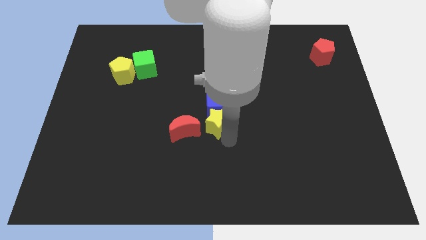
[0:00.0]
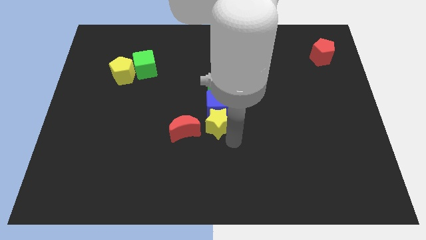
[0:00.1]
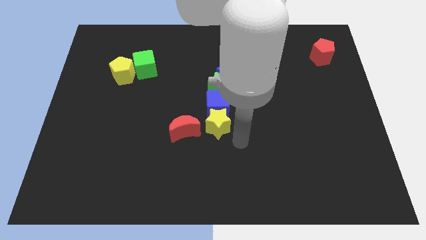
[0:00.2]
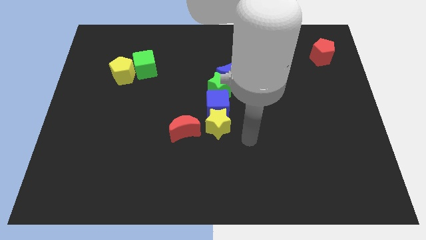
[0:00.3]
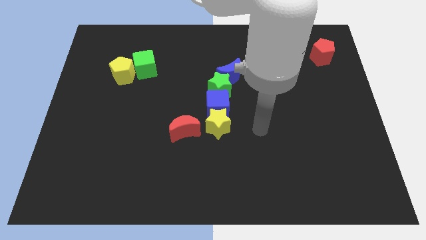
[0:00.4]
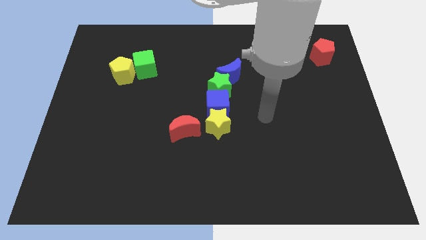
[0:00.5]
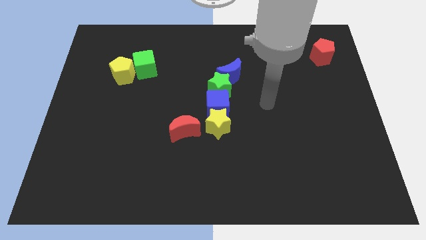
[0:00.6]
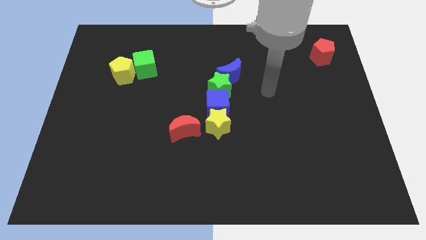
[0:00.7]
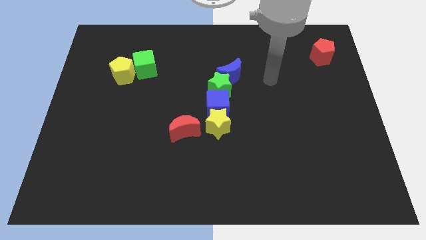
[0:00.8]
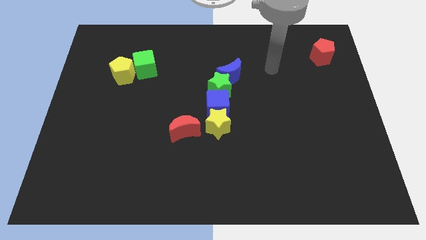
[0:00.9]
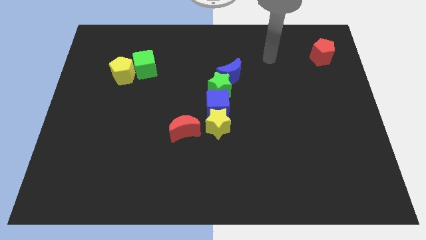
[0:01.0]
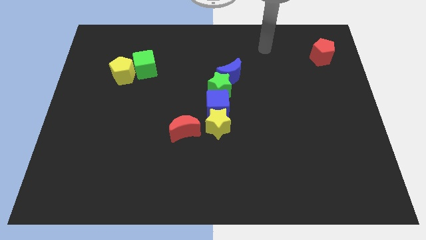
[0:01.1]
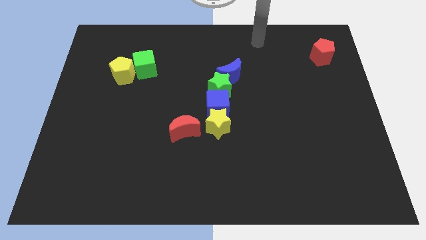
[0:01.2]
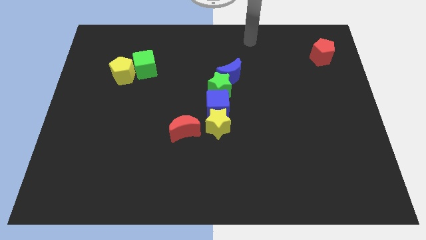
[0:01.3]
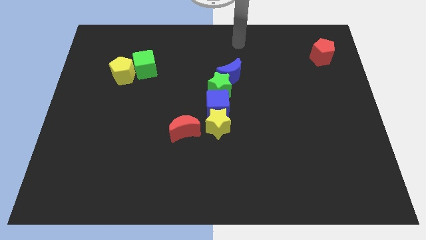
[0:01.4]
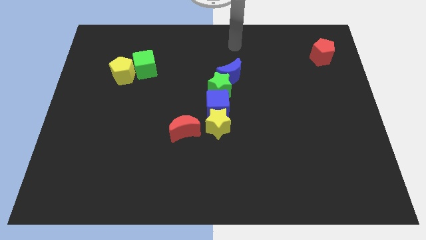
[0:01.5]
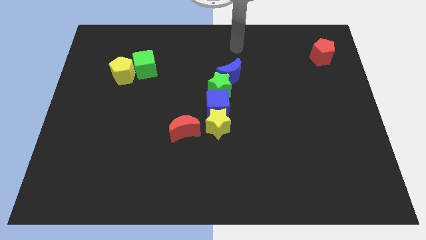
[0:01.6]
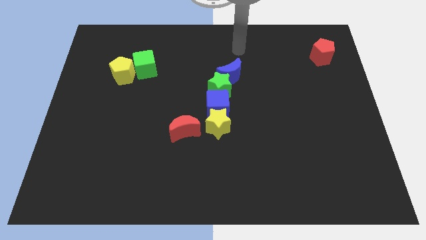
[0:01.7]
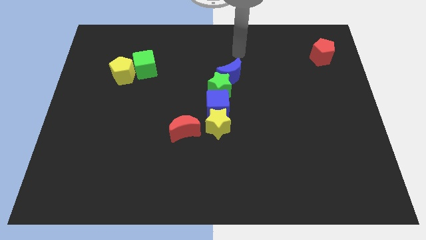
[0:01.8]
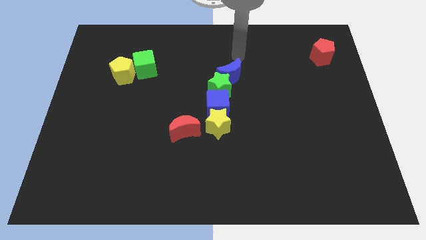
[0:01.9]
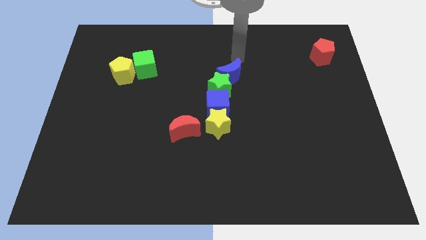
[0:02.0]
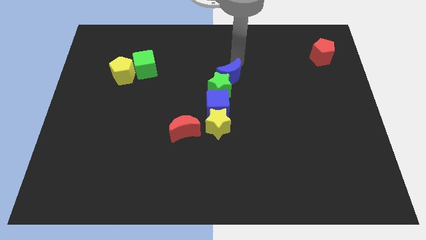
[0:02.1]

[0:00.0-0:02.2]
move the arm to the top of the blue crescent

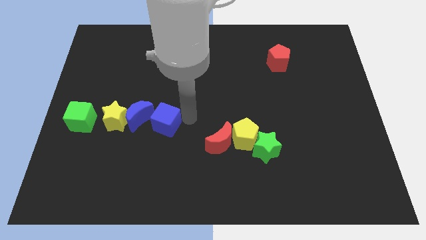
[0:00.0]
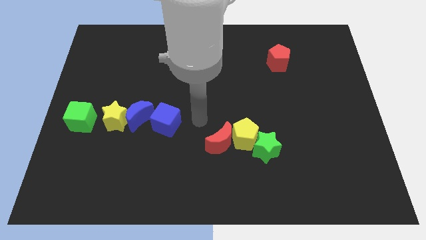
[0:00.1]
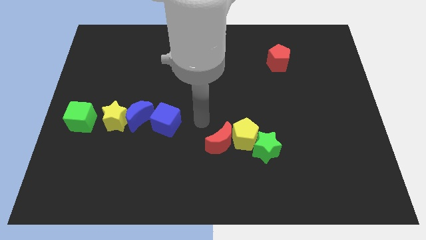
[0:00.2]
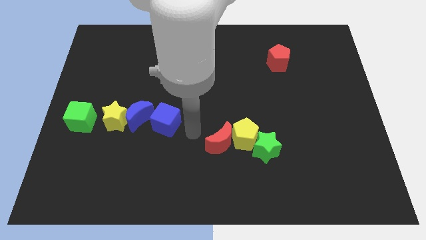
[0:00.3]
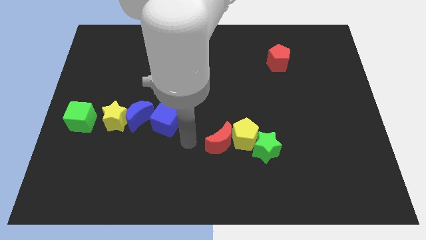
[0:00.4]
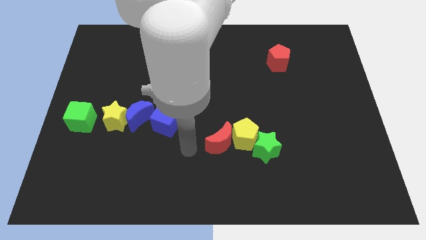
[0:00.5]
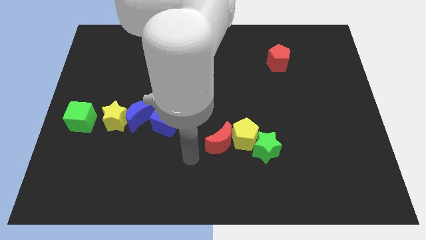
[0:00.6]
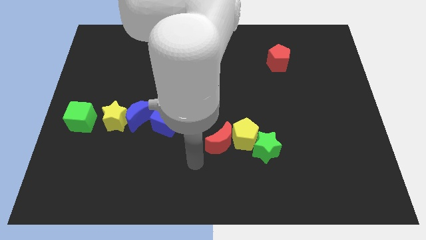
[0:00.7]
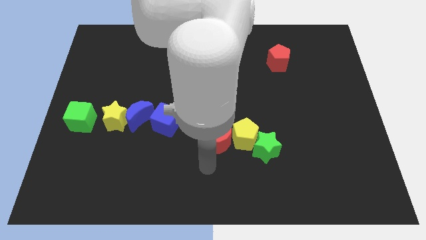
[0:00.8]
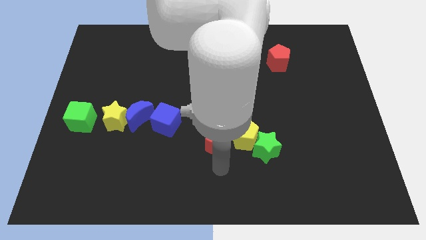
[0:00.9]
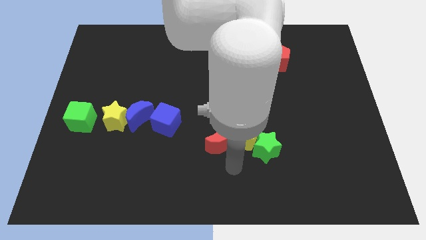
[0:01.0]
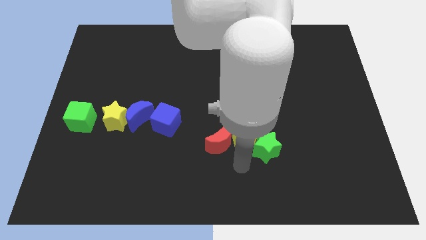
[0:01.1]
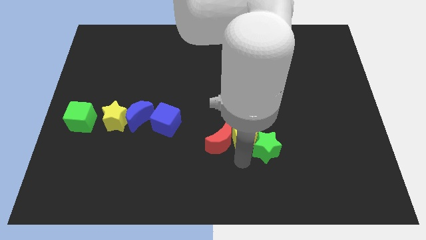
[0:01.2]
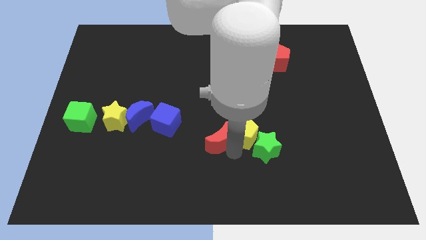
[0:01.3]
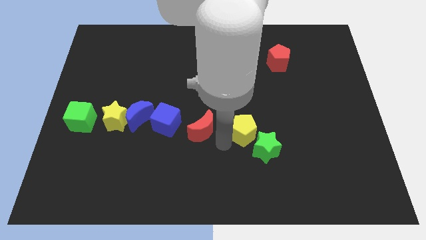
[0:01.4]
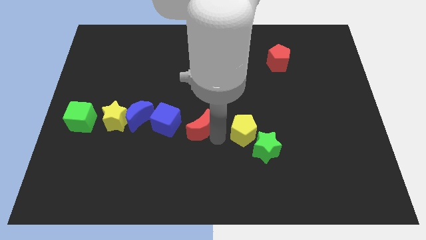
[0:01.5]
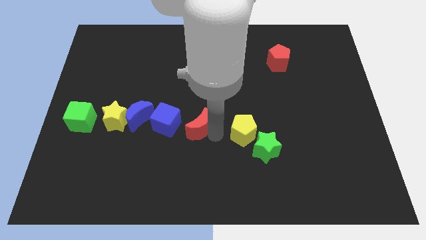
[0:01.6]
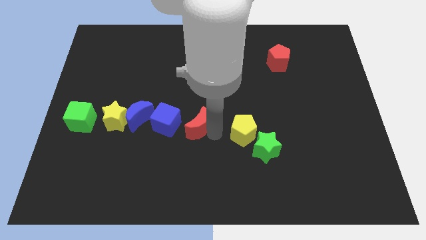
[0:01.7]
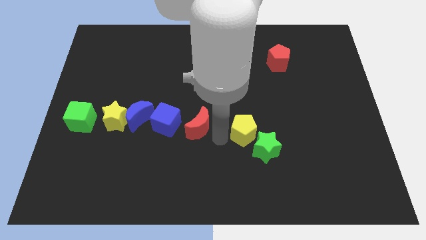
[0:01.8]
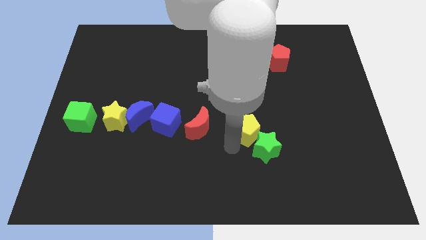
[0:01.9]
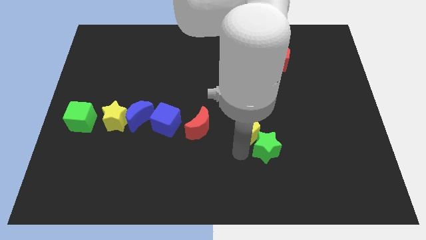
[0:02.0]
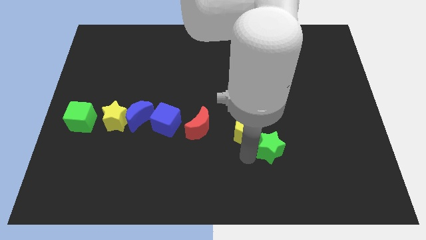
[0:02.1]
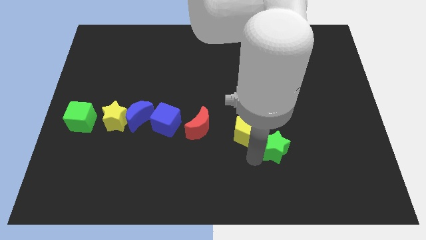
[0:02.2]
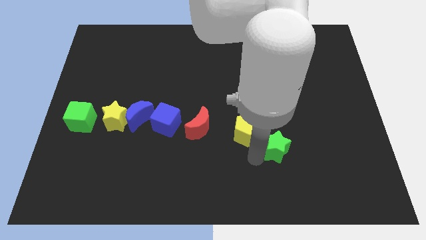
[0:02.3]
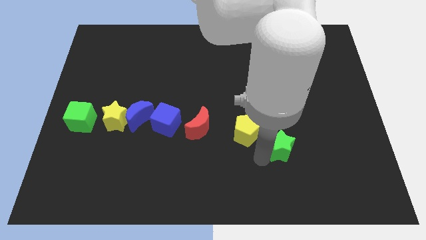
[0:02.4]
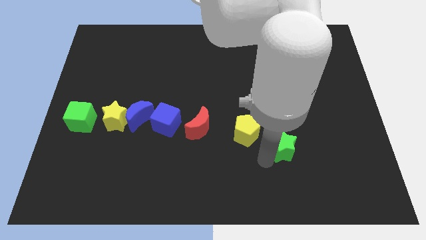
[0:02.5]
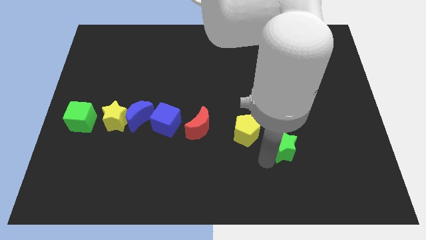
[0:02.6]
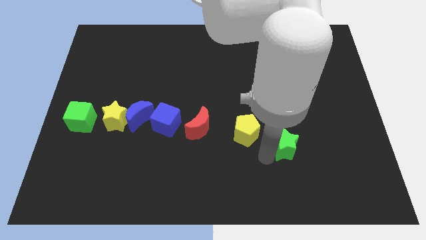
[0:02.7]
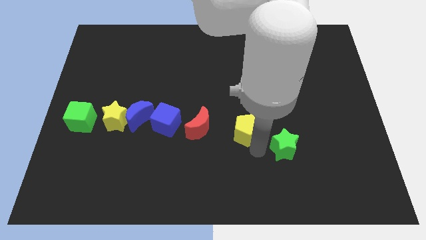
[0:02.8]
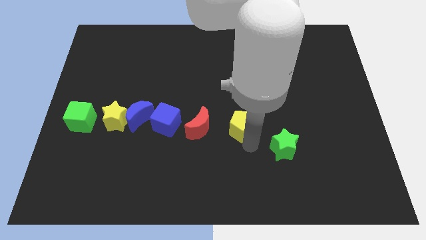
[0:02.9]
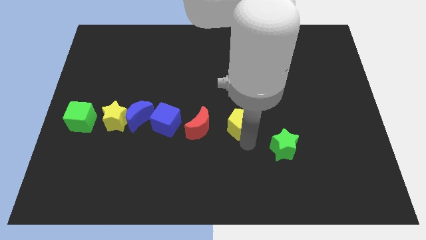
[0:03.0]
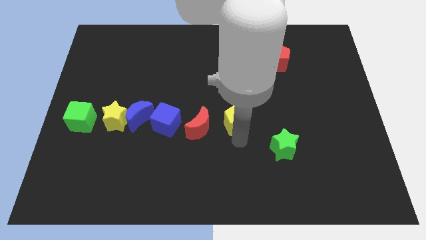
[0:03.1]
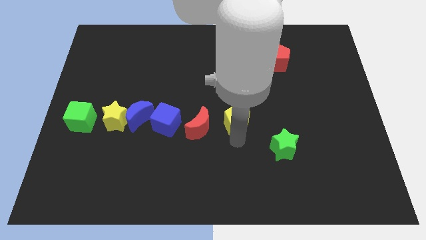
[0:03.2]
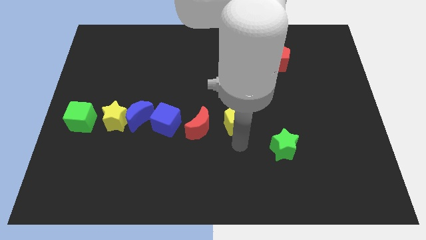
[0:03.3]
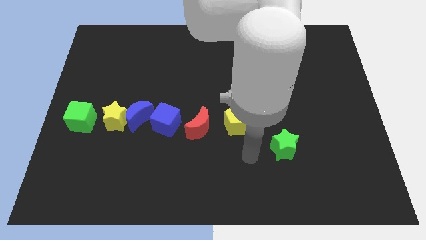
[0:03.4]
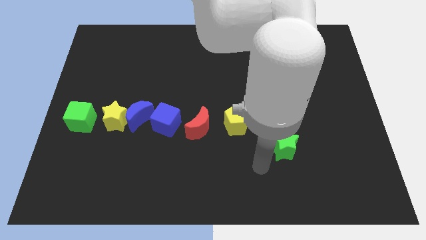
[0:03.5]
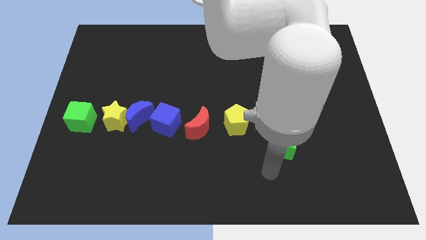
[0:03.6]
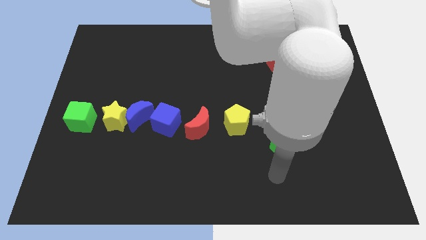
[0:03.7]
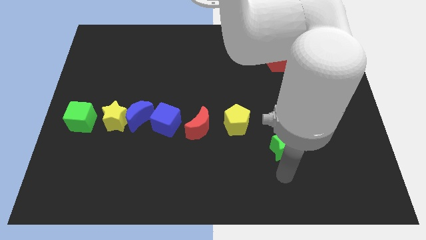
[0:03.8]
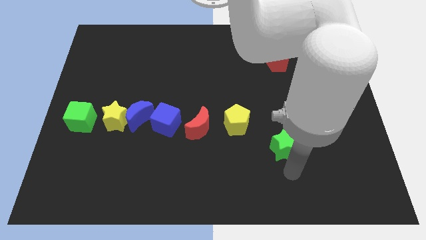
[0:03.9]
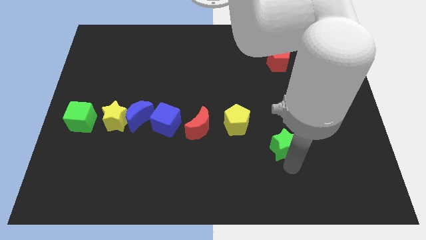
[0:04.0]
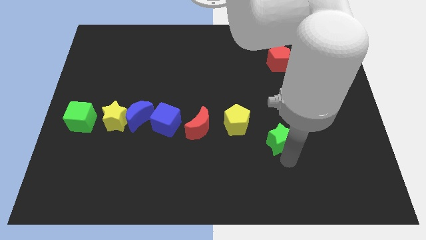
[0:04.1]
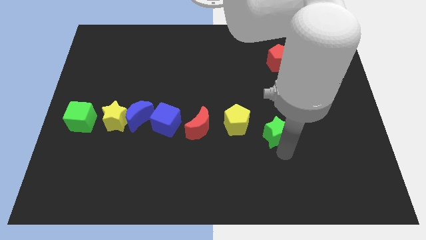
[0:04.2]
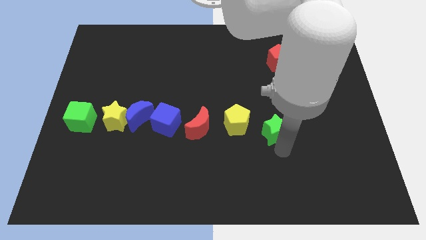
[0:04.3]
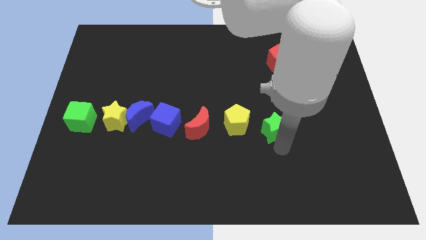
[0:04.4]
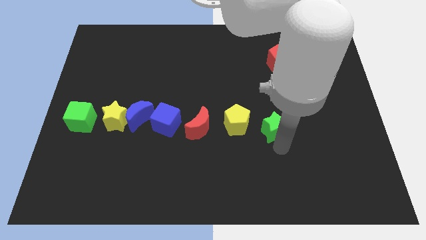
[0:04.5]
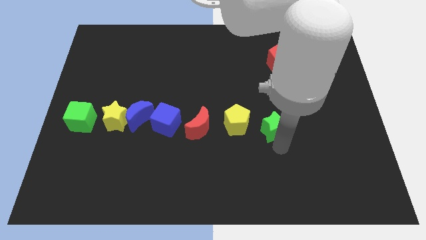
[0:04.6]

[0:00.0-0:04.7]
arrange a group of blocks properly in a line

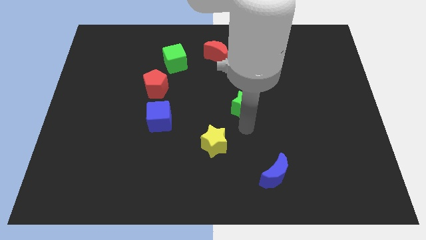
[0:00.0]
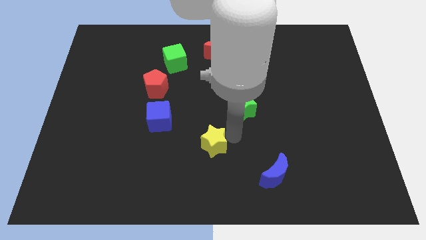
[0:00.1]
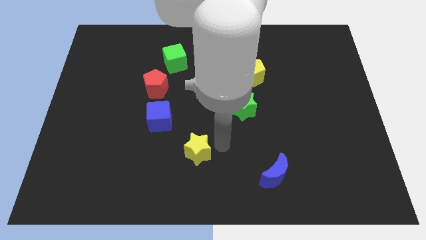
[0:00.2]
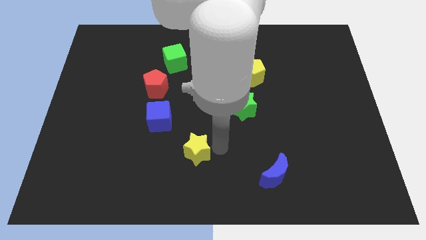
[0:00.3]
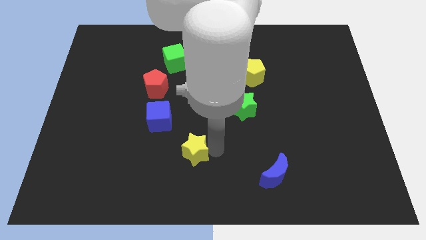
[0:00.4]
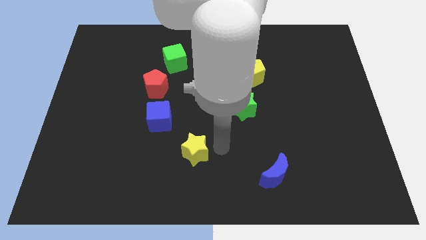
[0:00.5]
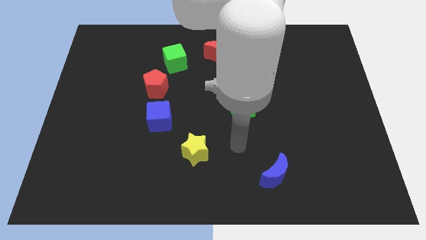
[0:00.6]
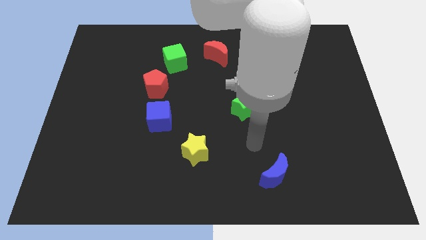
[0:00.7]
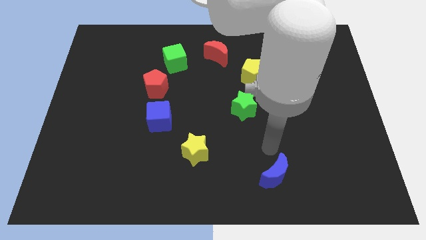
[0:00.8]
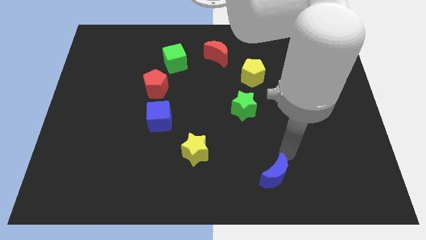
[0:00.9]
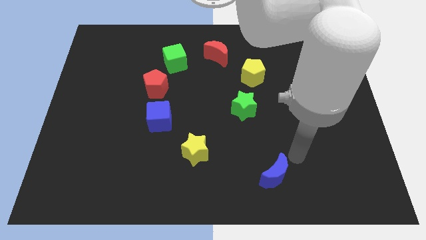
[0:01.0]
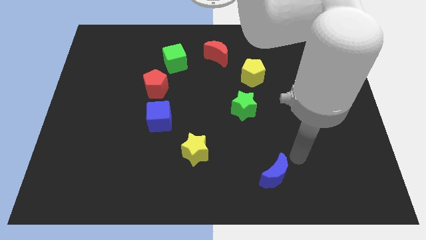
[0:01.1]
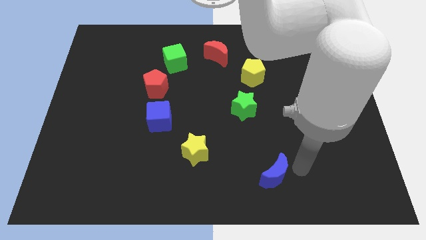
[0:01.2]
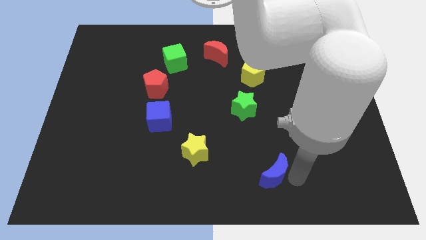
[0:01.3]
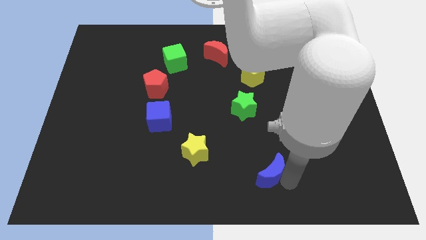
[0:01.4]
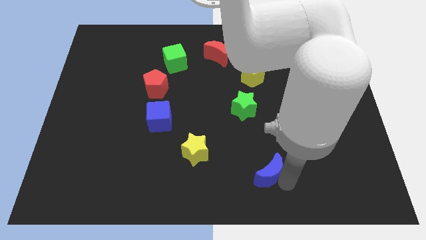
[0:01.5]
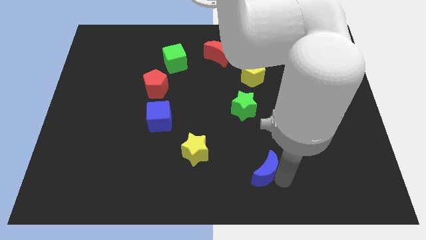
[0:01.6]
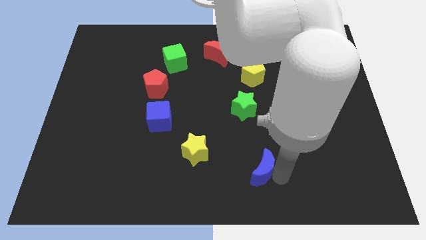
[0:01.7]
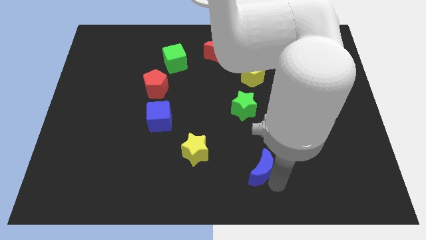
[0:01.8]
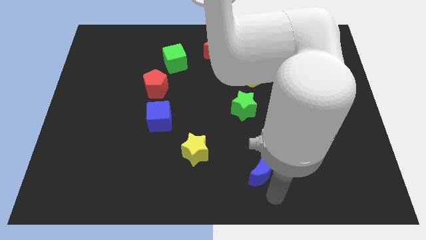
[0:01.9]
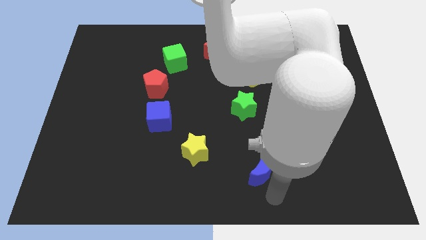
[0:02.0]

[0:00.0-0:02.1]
slide the blue moon diagonally to yellow star
